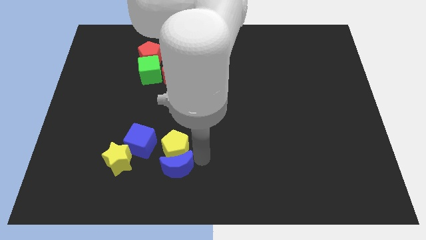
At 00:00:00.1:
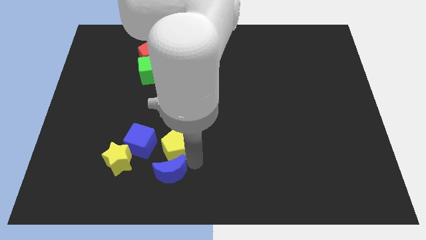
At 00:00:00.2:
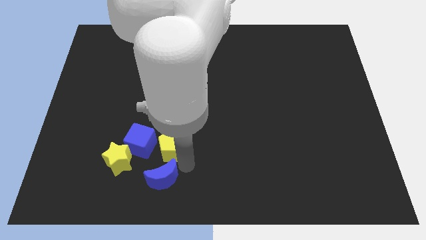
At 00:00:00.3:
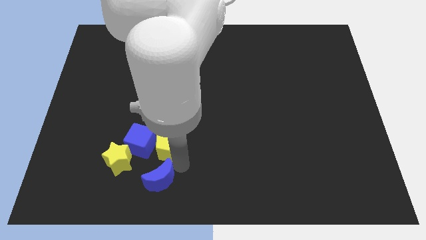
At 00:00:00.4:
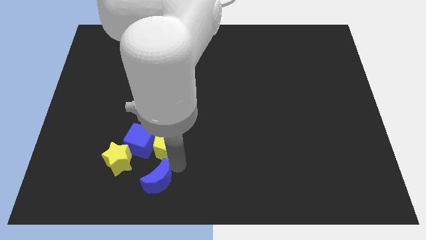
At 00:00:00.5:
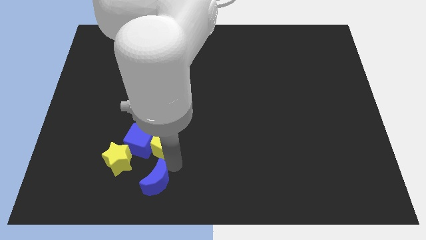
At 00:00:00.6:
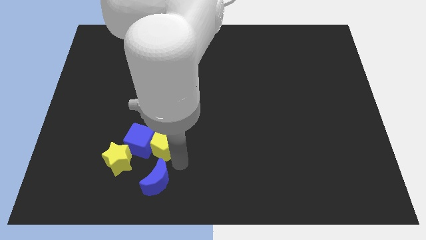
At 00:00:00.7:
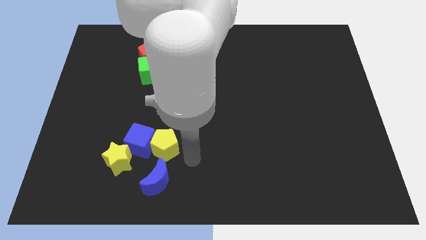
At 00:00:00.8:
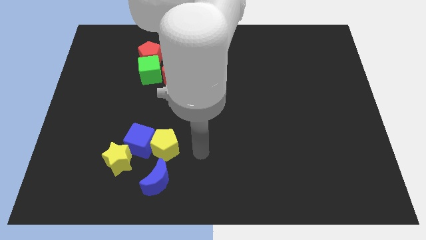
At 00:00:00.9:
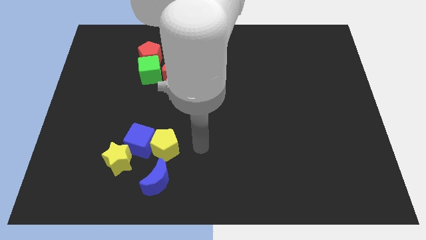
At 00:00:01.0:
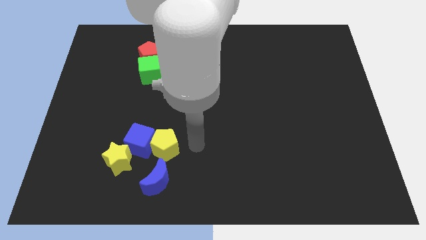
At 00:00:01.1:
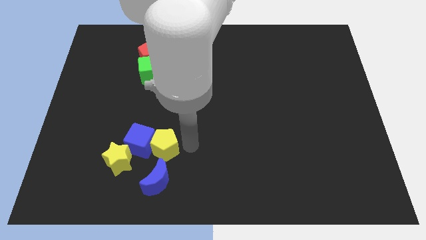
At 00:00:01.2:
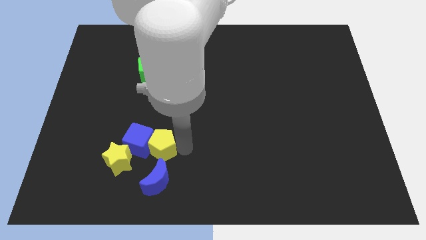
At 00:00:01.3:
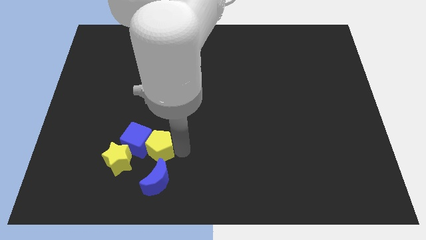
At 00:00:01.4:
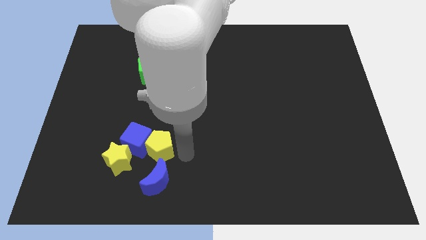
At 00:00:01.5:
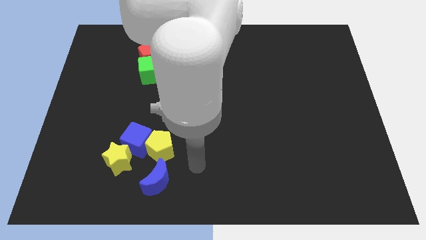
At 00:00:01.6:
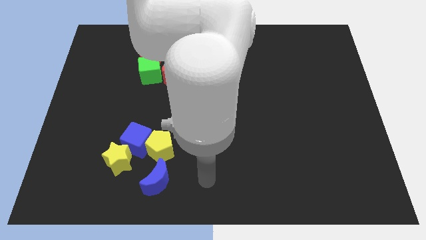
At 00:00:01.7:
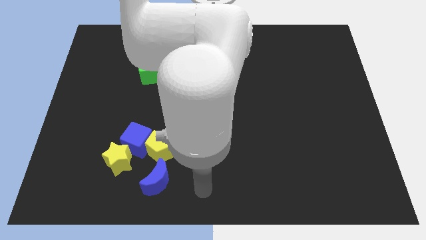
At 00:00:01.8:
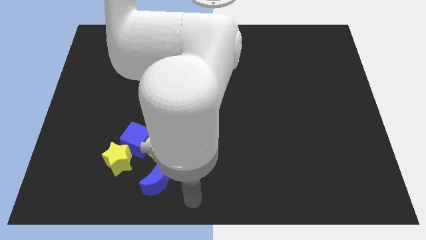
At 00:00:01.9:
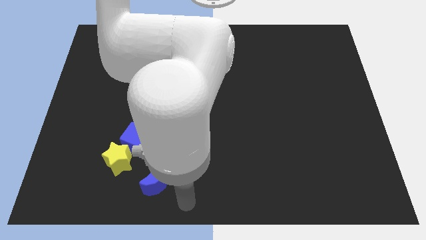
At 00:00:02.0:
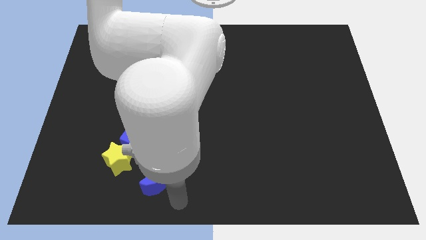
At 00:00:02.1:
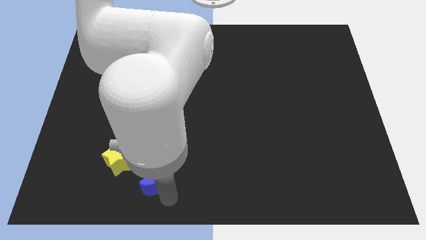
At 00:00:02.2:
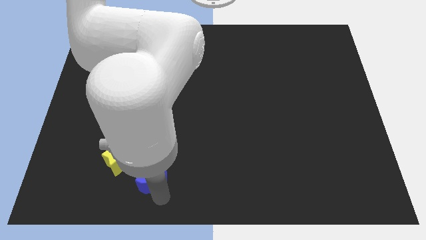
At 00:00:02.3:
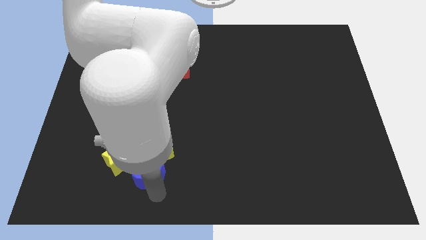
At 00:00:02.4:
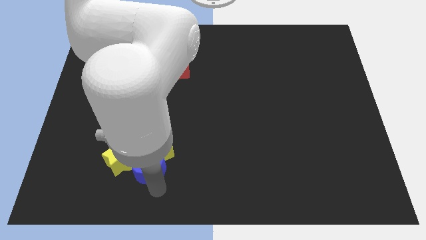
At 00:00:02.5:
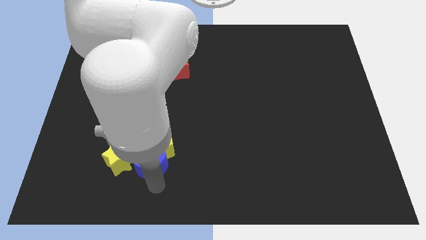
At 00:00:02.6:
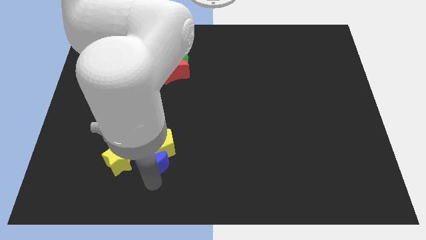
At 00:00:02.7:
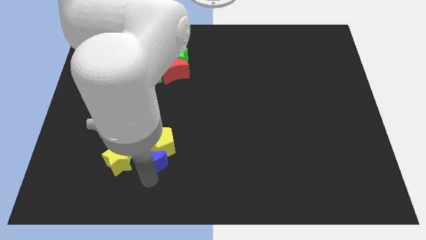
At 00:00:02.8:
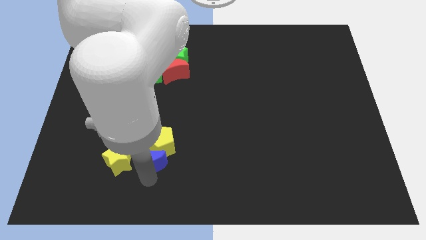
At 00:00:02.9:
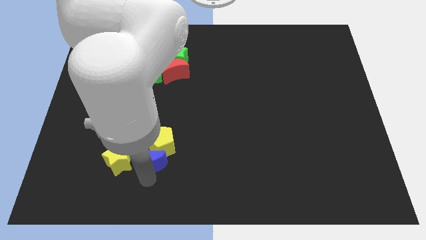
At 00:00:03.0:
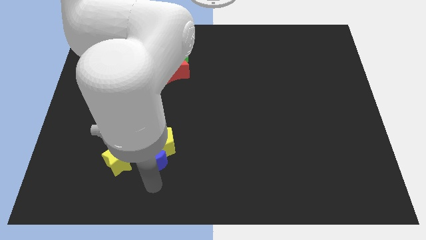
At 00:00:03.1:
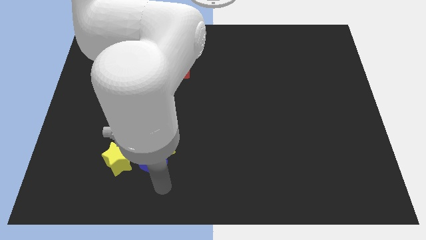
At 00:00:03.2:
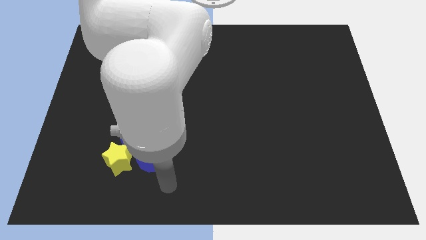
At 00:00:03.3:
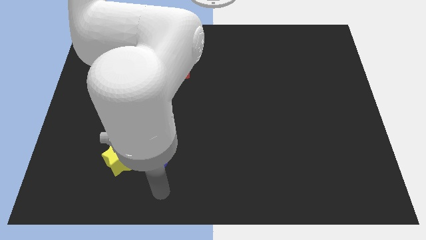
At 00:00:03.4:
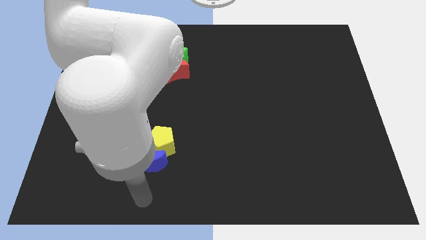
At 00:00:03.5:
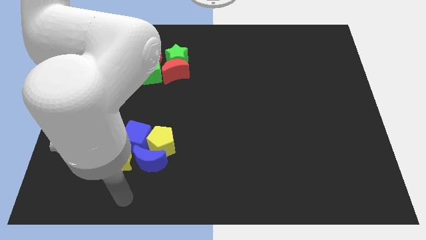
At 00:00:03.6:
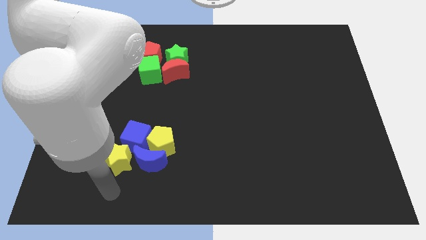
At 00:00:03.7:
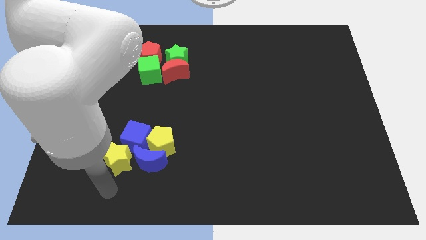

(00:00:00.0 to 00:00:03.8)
push the blue crescent to the bottom of the yellow pentagon

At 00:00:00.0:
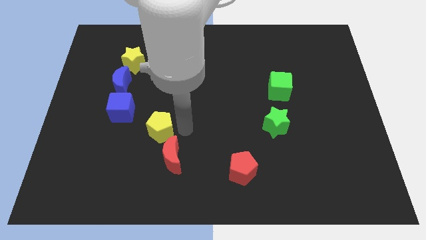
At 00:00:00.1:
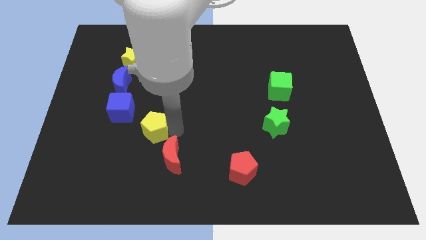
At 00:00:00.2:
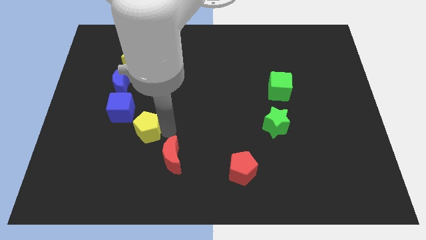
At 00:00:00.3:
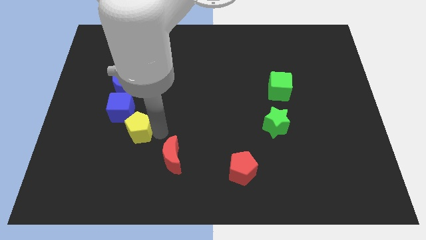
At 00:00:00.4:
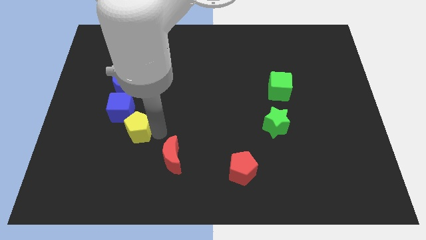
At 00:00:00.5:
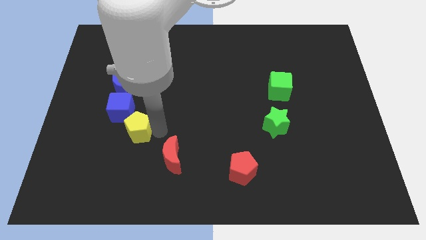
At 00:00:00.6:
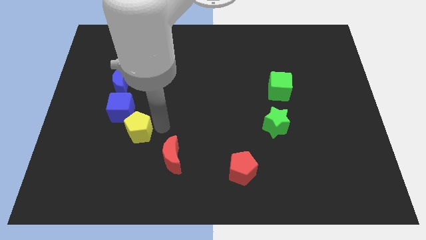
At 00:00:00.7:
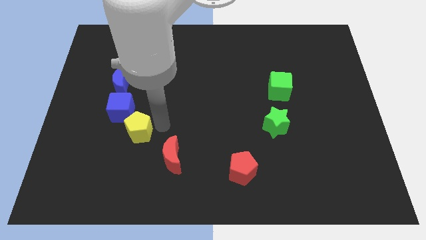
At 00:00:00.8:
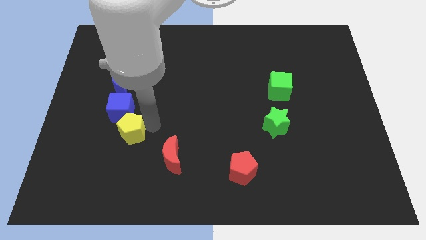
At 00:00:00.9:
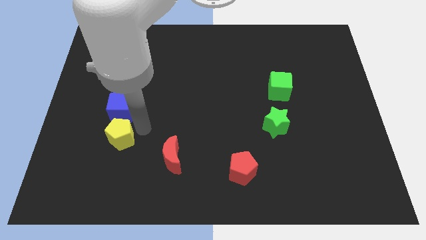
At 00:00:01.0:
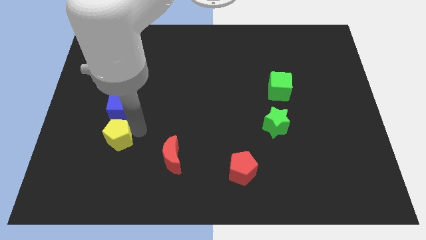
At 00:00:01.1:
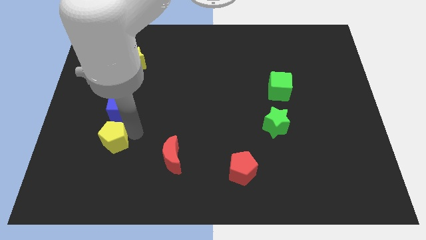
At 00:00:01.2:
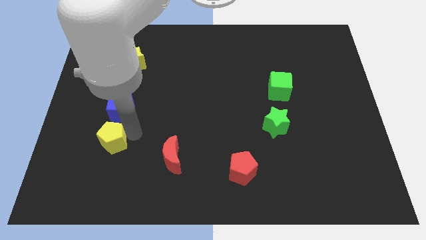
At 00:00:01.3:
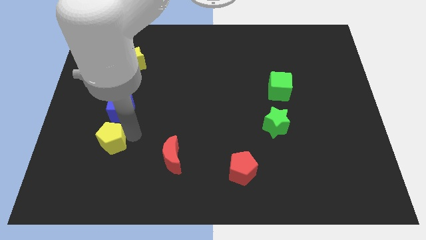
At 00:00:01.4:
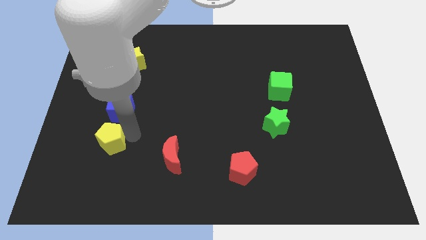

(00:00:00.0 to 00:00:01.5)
place the yellow pentagon below the blue cube

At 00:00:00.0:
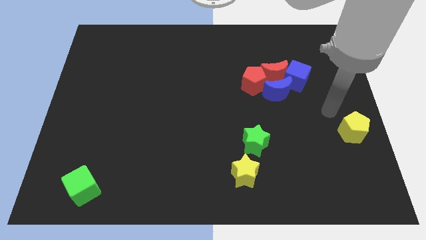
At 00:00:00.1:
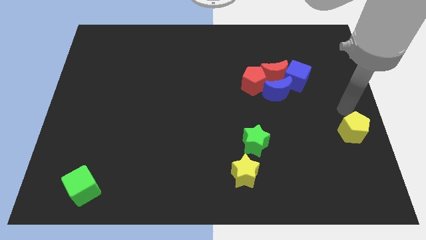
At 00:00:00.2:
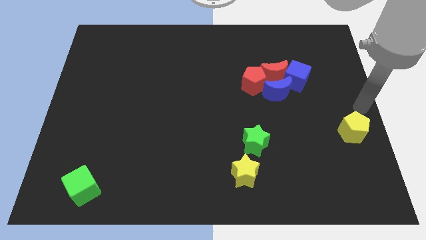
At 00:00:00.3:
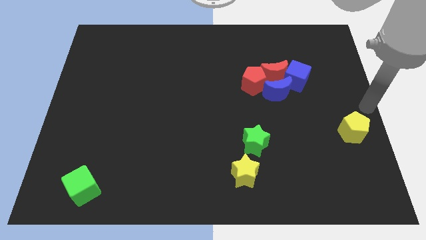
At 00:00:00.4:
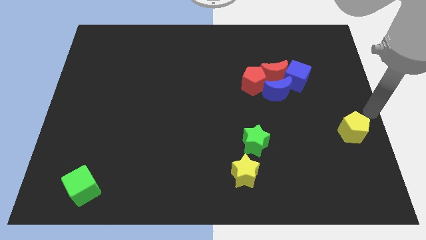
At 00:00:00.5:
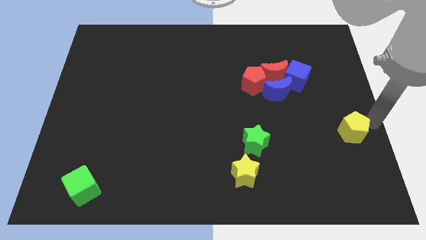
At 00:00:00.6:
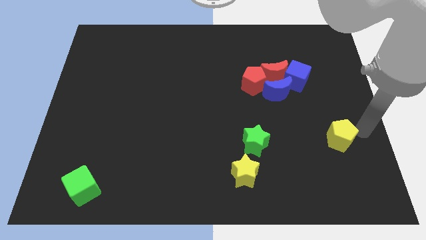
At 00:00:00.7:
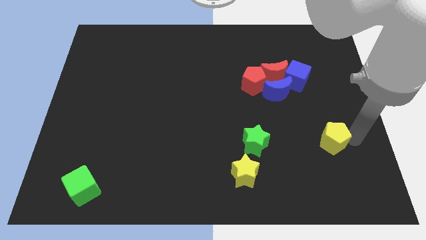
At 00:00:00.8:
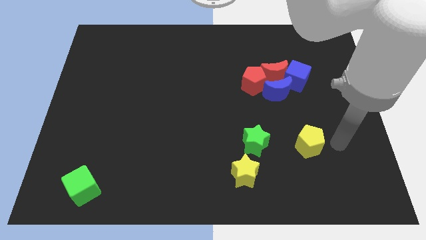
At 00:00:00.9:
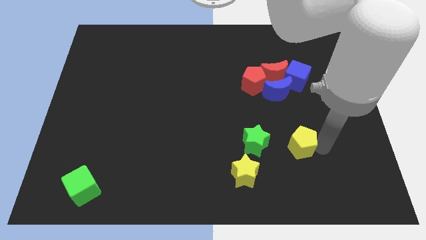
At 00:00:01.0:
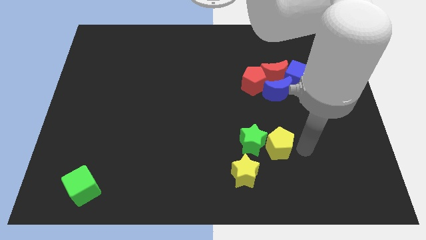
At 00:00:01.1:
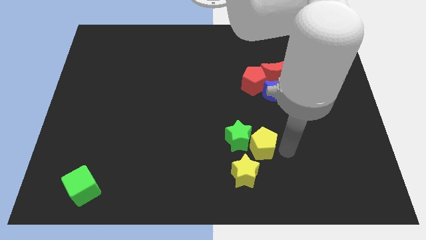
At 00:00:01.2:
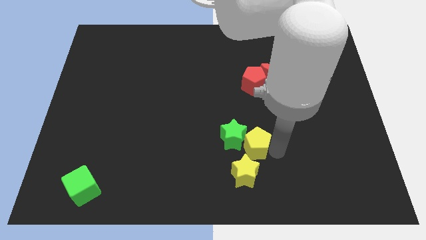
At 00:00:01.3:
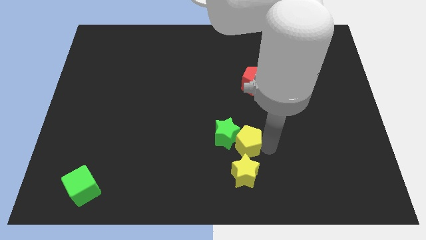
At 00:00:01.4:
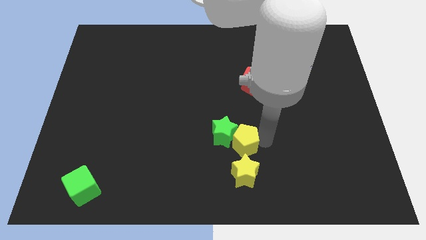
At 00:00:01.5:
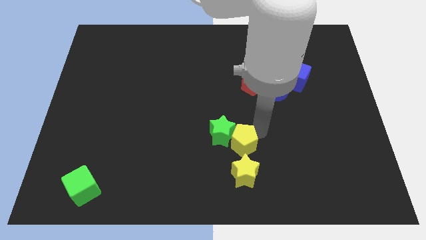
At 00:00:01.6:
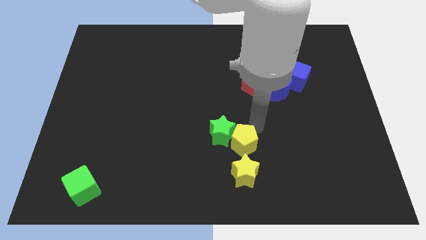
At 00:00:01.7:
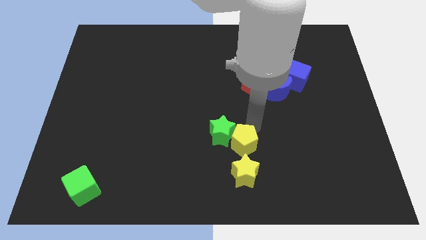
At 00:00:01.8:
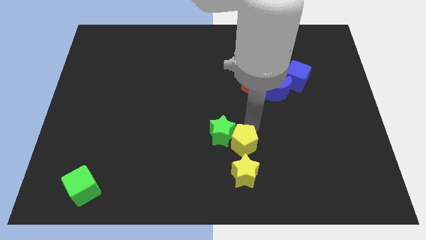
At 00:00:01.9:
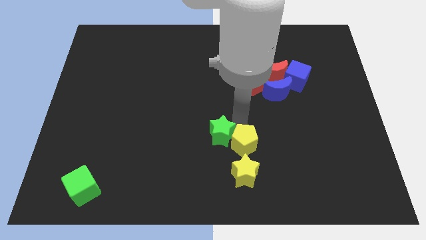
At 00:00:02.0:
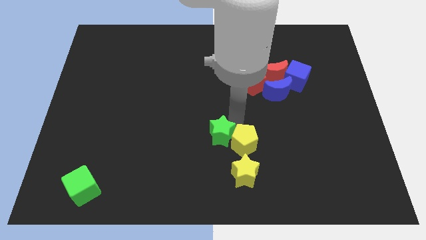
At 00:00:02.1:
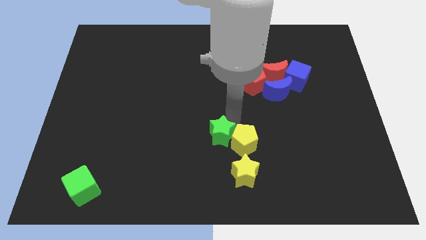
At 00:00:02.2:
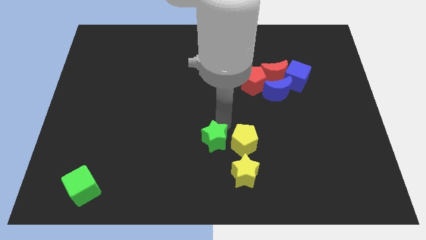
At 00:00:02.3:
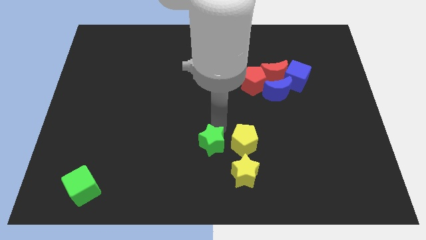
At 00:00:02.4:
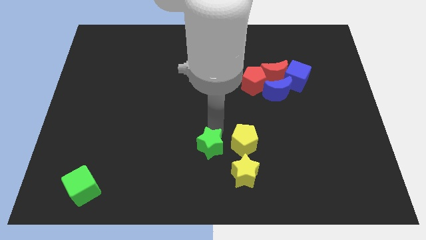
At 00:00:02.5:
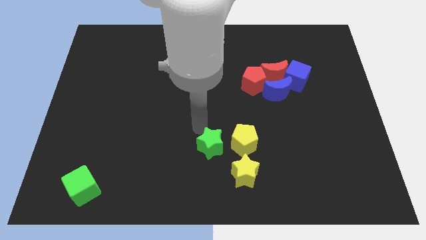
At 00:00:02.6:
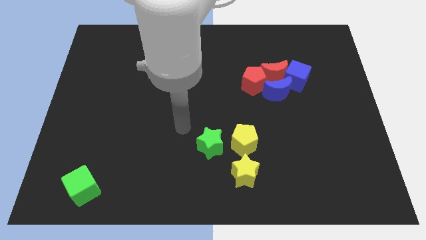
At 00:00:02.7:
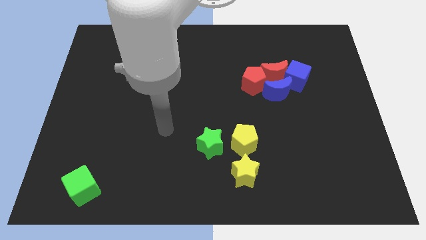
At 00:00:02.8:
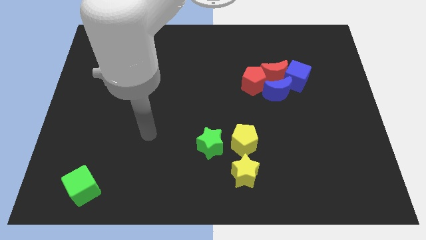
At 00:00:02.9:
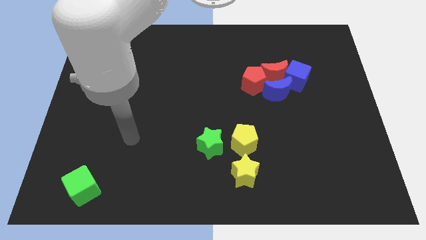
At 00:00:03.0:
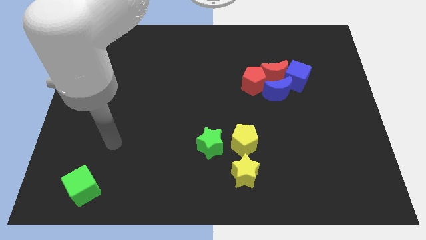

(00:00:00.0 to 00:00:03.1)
push the yellow pentagon into the green star towards the bottom of the board

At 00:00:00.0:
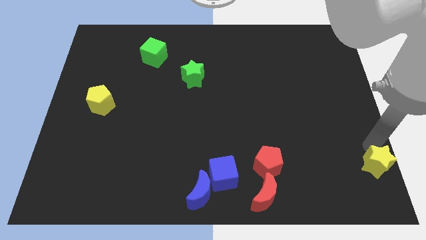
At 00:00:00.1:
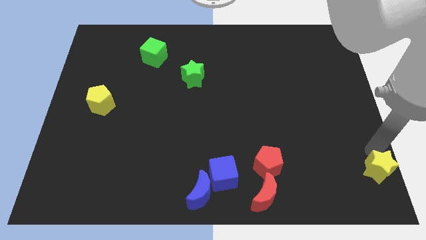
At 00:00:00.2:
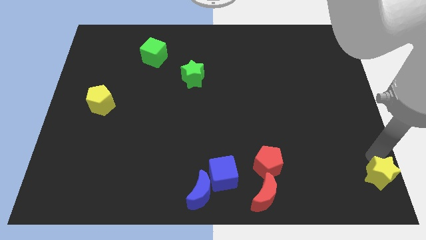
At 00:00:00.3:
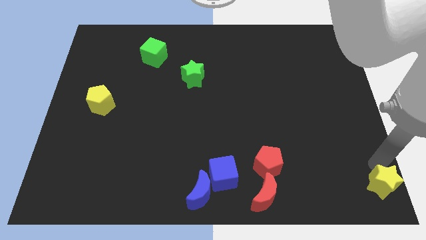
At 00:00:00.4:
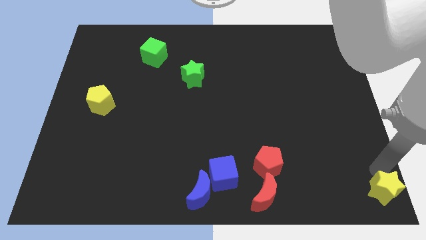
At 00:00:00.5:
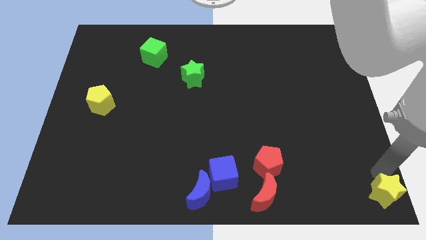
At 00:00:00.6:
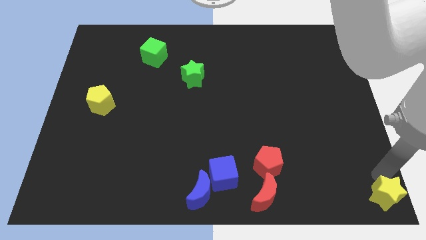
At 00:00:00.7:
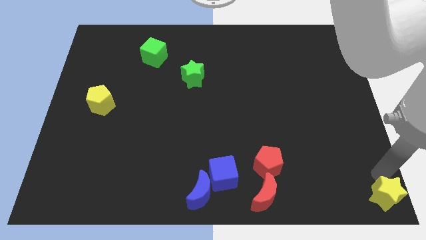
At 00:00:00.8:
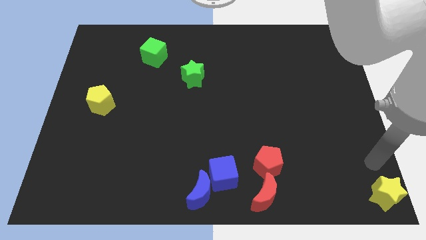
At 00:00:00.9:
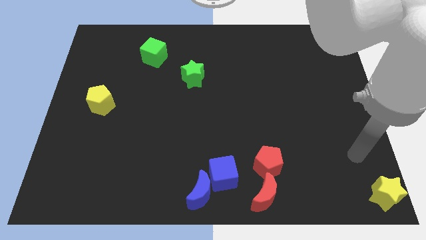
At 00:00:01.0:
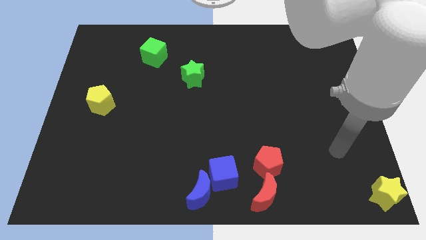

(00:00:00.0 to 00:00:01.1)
push the yellow star horizontally to the right of the red crescent
